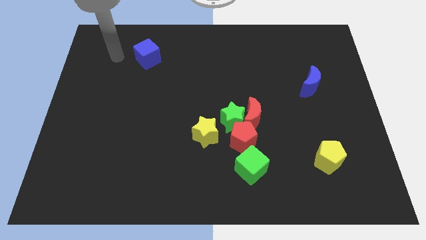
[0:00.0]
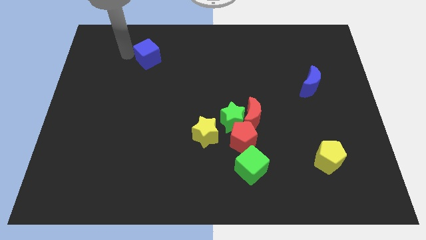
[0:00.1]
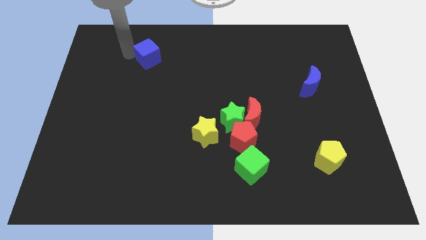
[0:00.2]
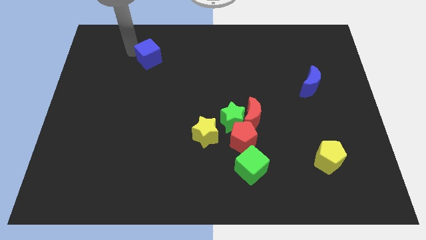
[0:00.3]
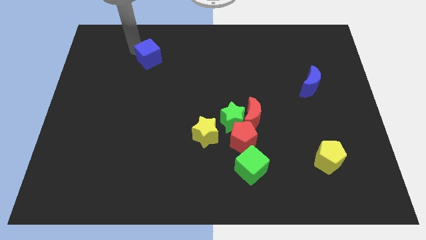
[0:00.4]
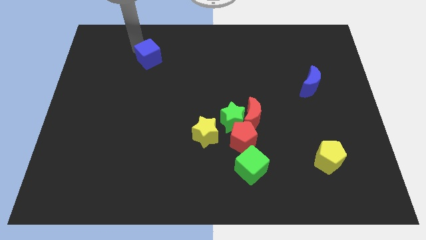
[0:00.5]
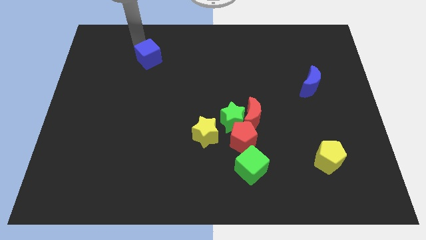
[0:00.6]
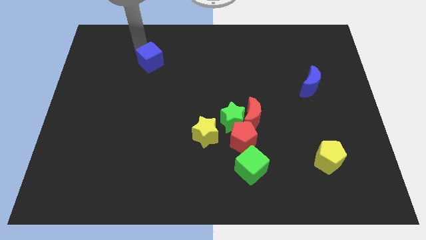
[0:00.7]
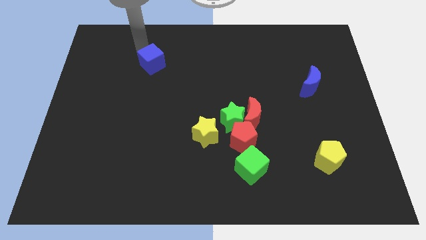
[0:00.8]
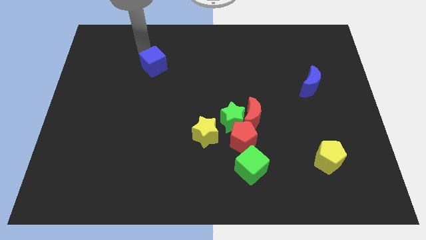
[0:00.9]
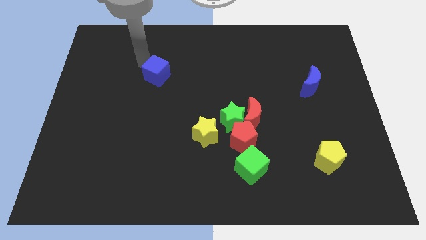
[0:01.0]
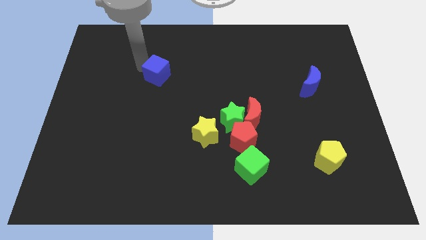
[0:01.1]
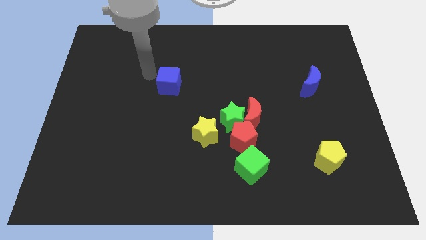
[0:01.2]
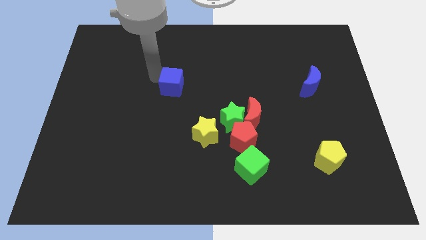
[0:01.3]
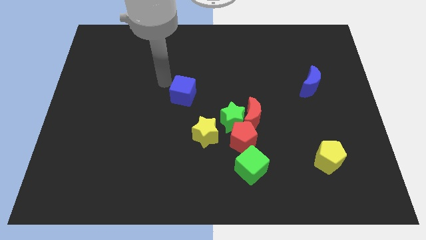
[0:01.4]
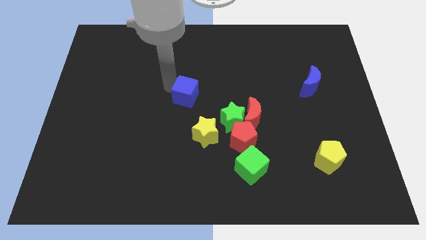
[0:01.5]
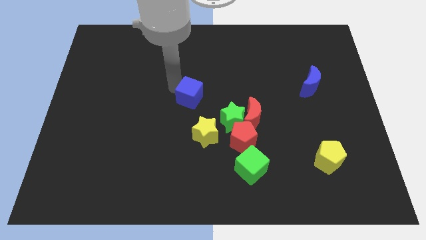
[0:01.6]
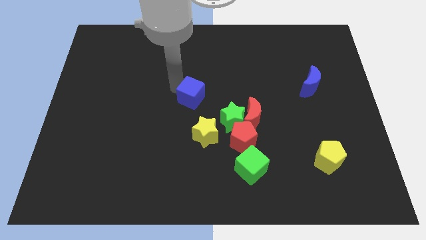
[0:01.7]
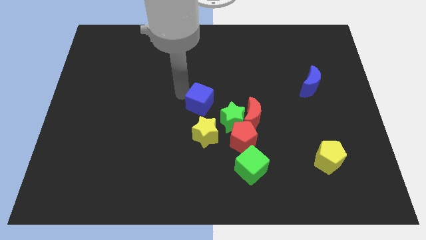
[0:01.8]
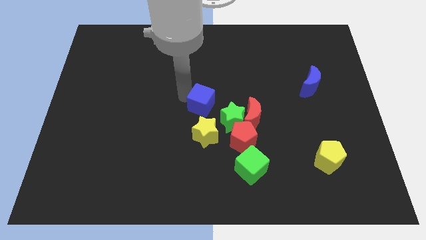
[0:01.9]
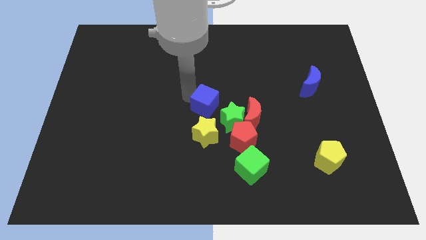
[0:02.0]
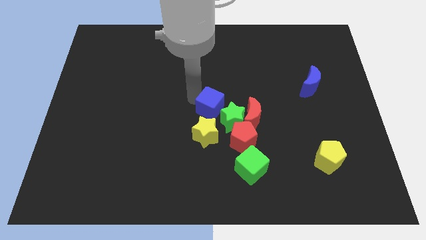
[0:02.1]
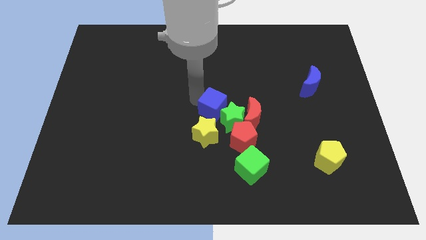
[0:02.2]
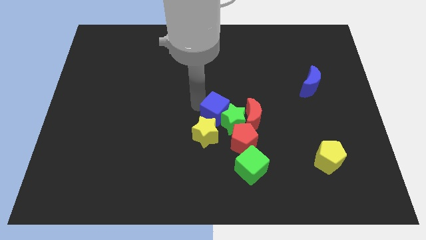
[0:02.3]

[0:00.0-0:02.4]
push the blue cube towards the center of the board

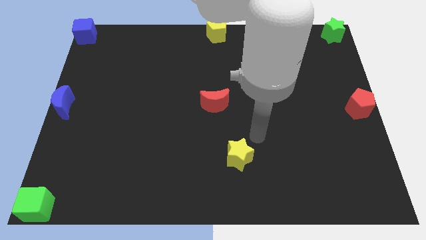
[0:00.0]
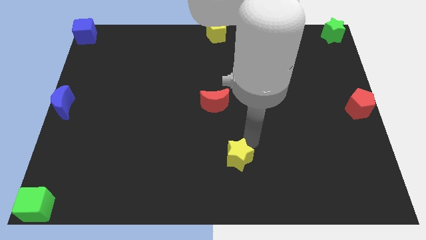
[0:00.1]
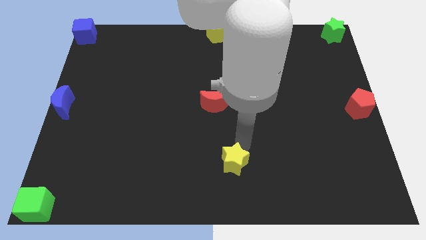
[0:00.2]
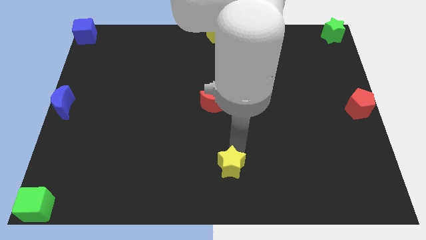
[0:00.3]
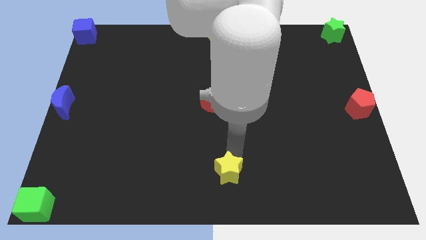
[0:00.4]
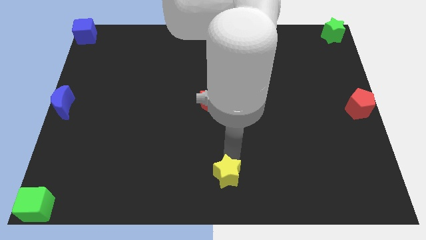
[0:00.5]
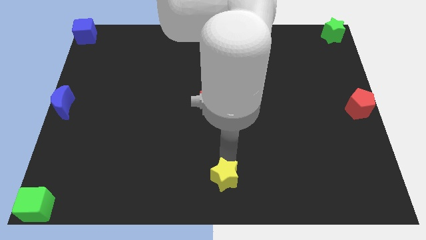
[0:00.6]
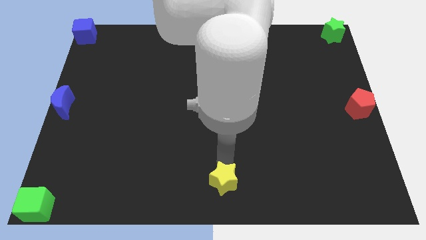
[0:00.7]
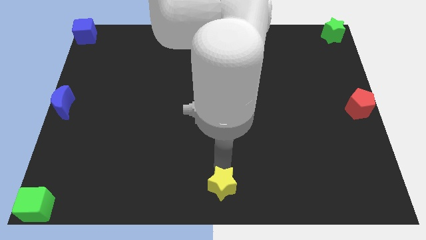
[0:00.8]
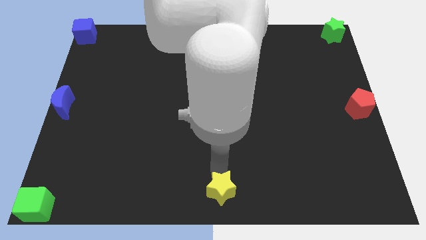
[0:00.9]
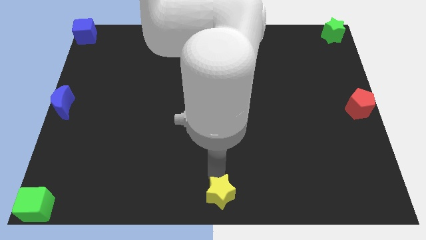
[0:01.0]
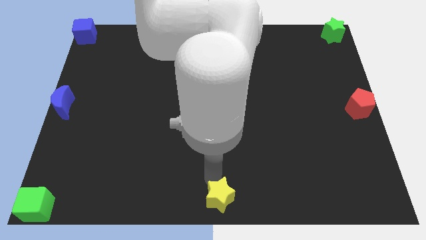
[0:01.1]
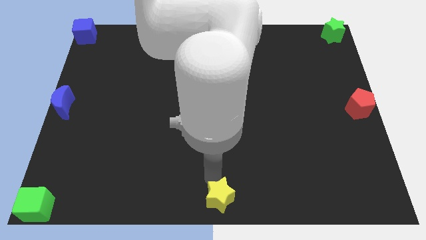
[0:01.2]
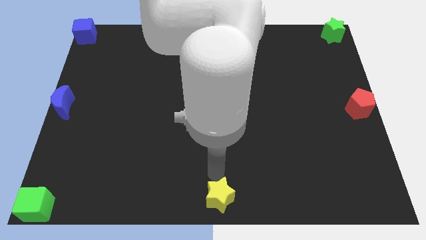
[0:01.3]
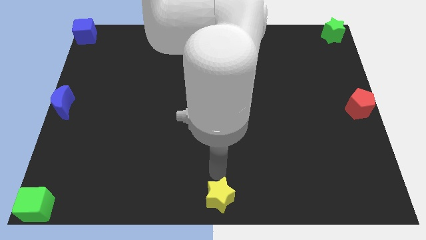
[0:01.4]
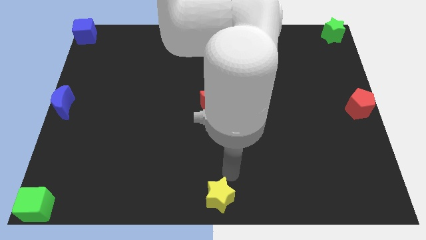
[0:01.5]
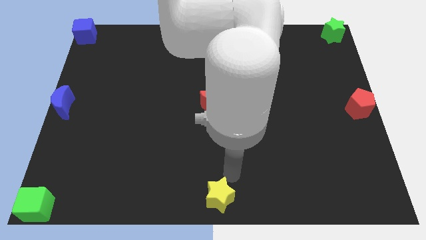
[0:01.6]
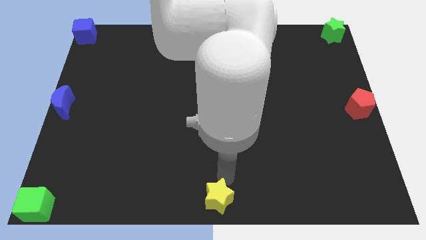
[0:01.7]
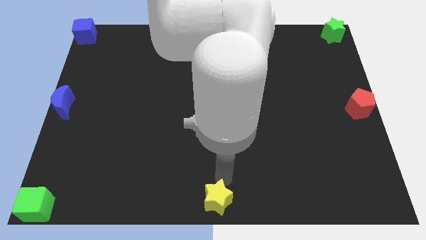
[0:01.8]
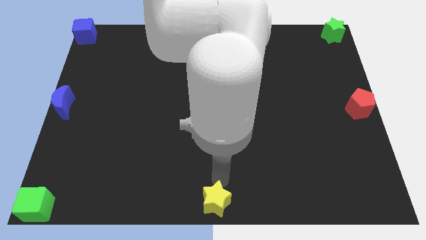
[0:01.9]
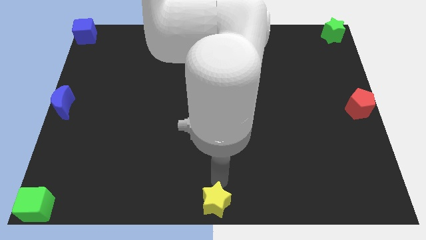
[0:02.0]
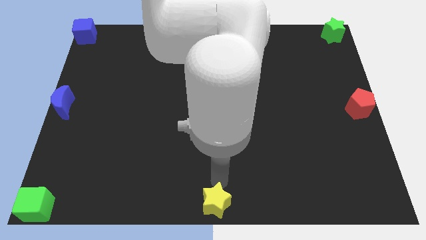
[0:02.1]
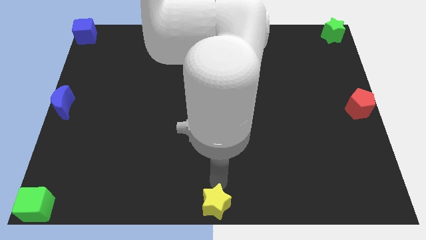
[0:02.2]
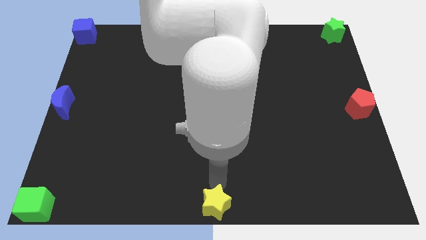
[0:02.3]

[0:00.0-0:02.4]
move the yellow star to the bottom center of the board

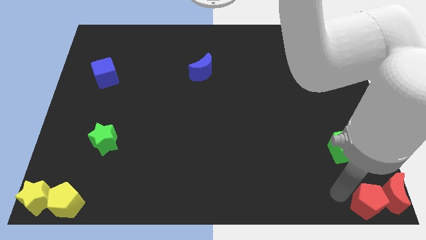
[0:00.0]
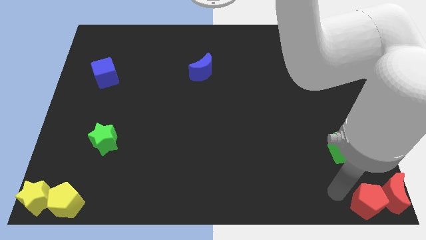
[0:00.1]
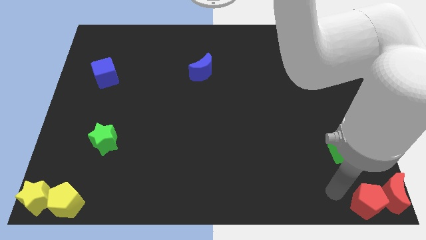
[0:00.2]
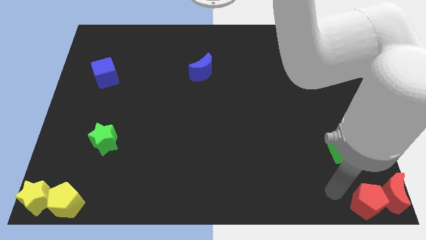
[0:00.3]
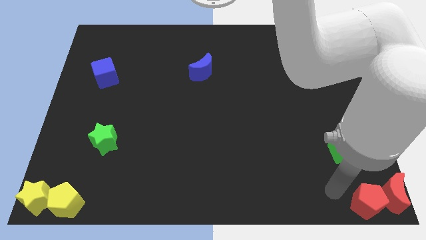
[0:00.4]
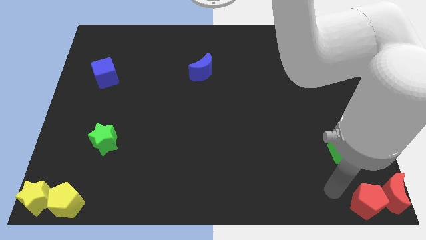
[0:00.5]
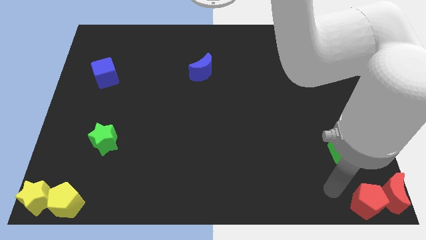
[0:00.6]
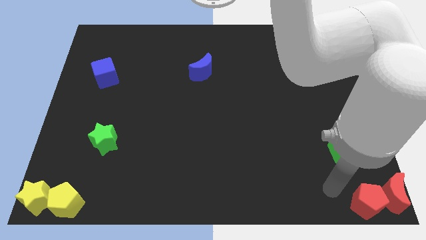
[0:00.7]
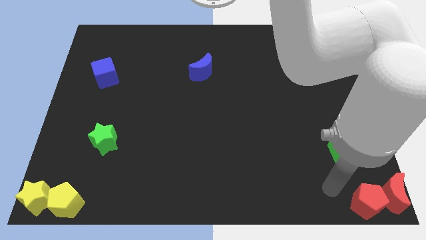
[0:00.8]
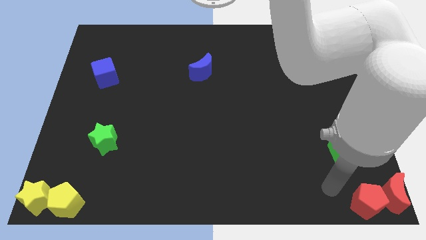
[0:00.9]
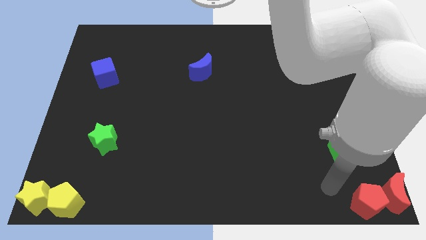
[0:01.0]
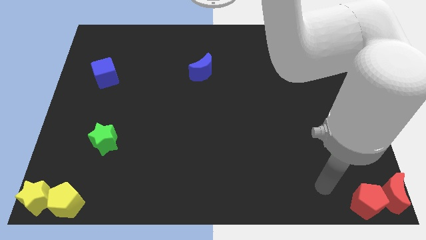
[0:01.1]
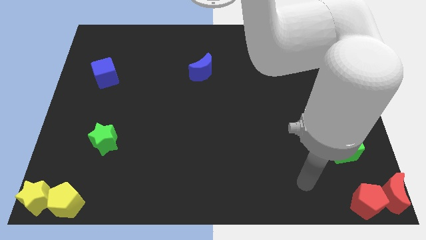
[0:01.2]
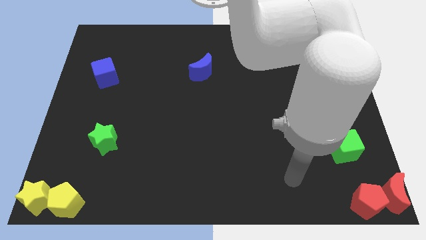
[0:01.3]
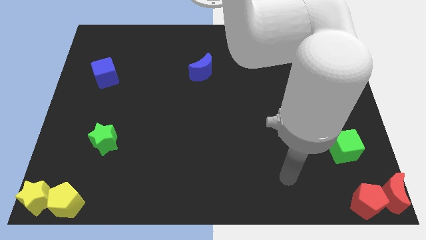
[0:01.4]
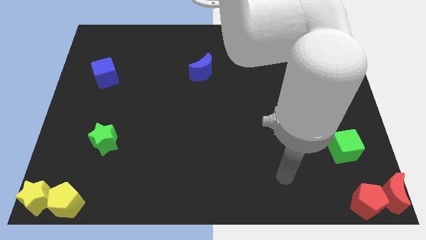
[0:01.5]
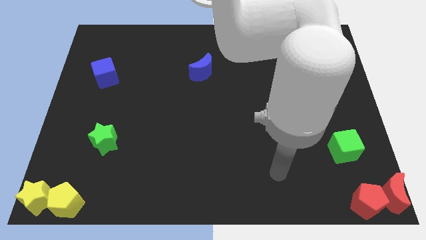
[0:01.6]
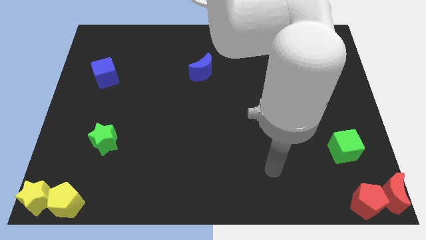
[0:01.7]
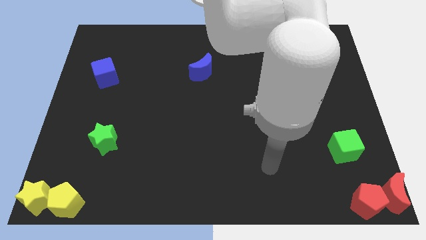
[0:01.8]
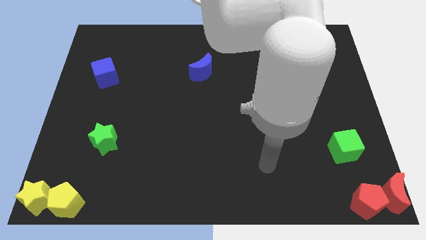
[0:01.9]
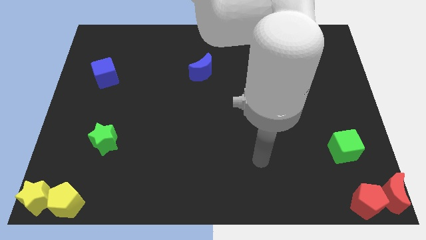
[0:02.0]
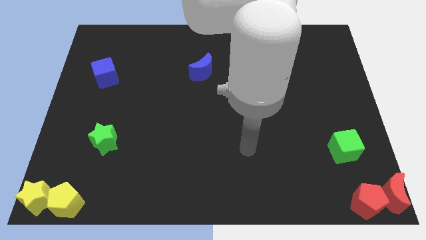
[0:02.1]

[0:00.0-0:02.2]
move away from the red pentagon

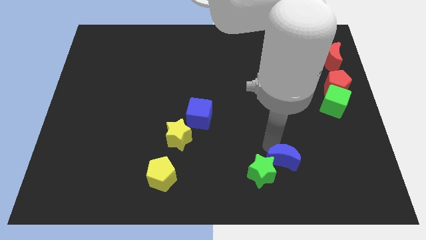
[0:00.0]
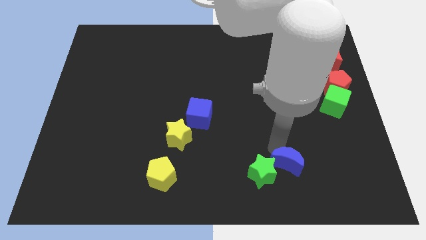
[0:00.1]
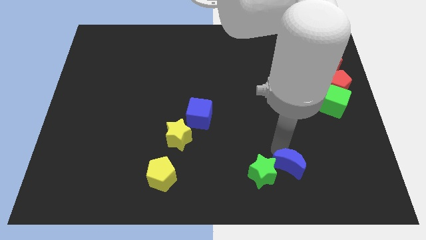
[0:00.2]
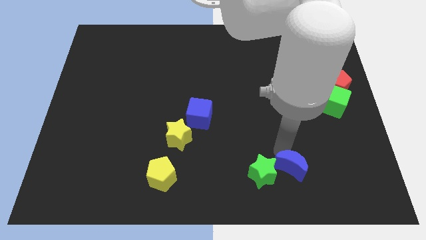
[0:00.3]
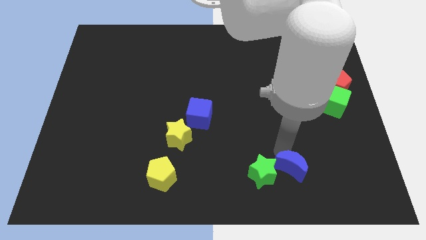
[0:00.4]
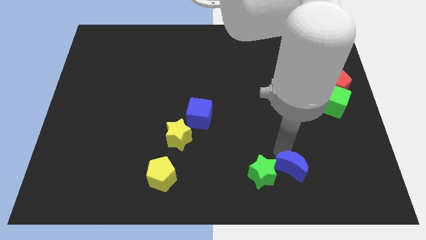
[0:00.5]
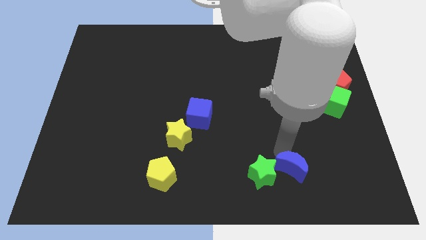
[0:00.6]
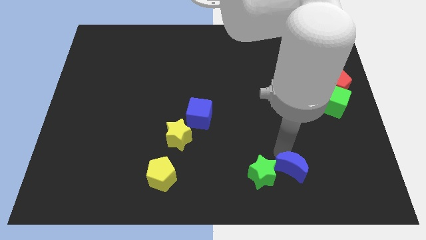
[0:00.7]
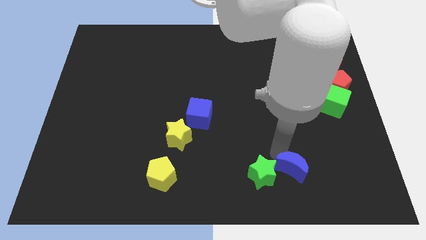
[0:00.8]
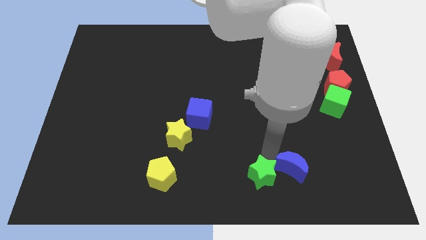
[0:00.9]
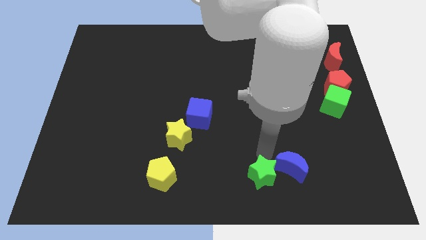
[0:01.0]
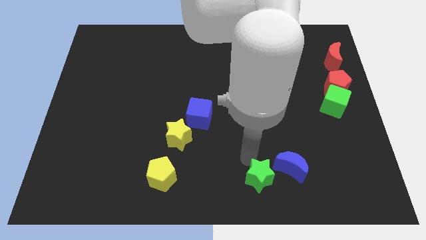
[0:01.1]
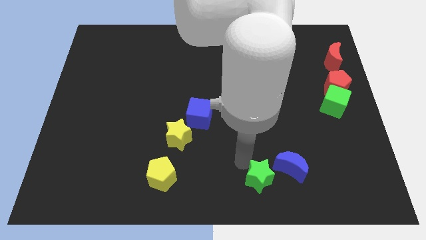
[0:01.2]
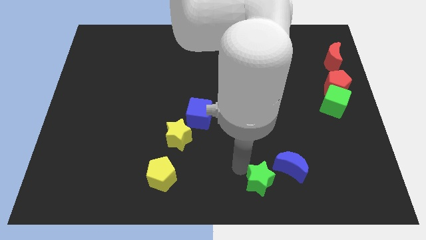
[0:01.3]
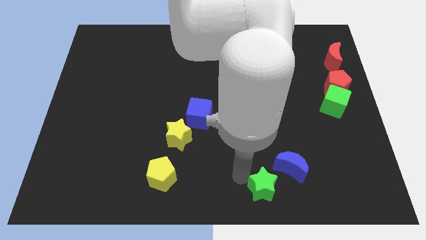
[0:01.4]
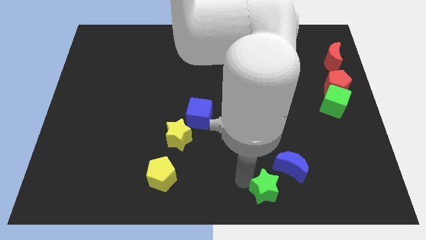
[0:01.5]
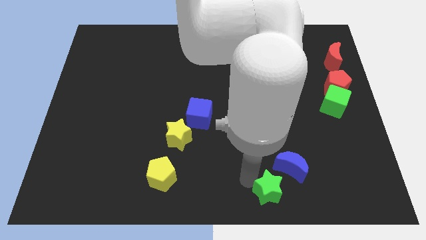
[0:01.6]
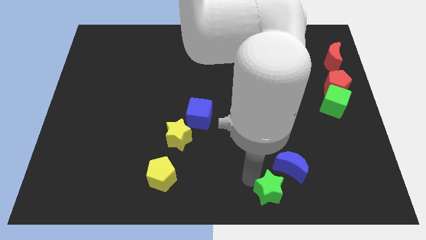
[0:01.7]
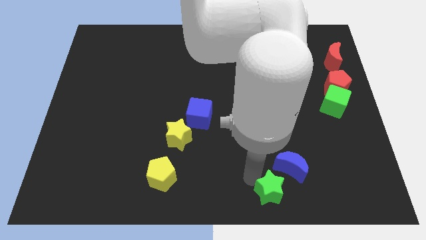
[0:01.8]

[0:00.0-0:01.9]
slide the green star to the bottom side of the blue moon

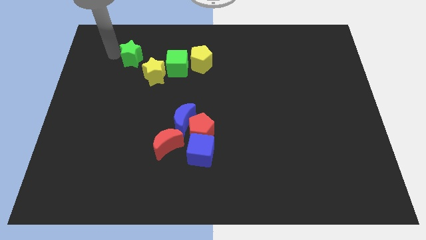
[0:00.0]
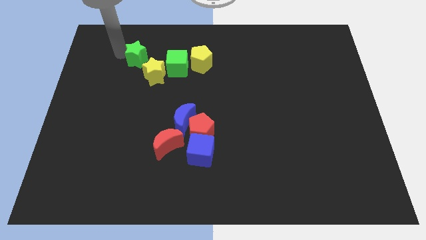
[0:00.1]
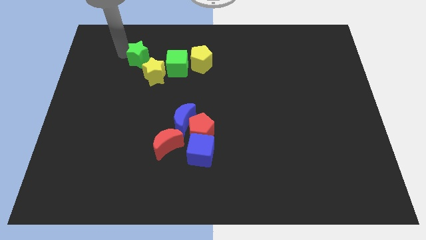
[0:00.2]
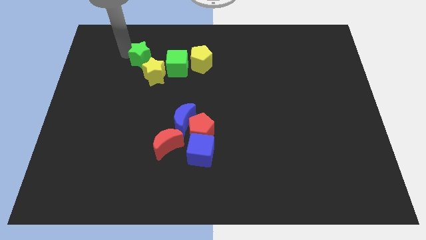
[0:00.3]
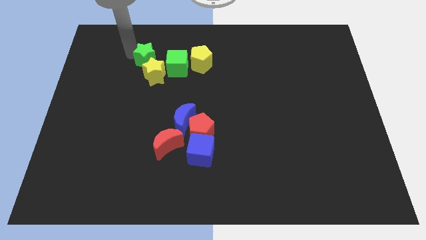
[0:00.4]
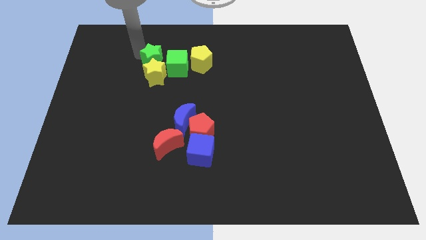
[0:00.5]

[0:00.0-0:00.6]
place the green star above the yellow star
